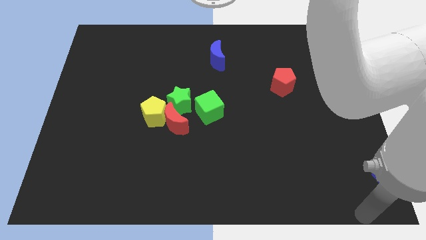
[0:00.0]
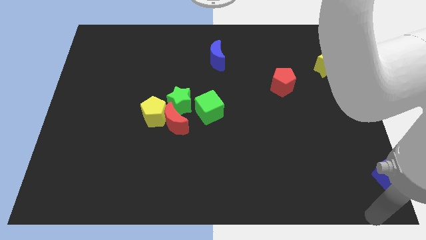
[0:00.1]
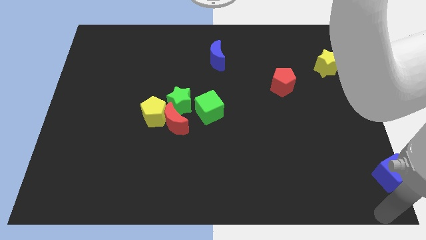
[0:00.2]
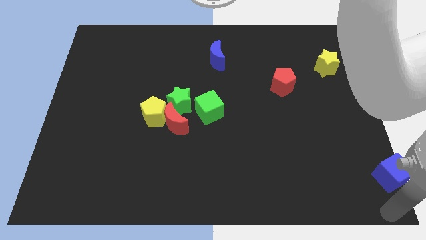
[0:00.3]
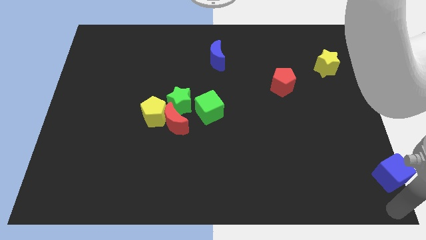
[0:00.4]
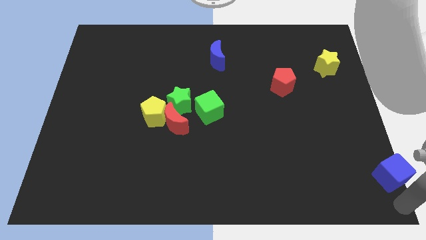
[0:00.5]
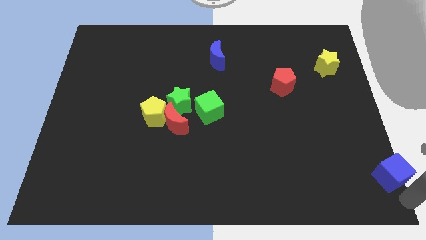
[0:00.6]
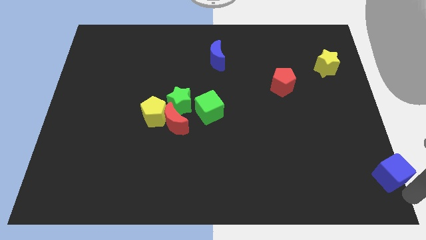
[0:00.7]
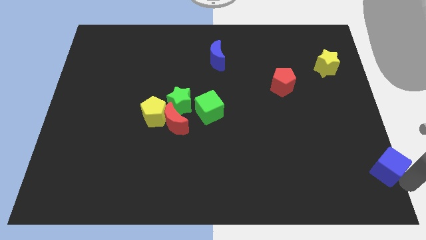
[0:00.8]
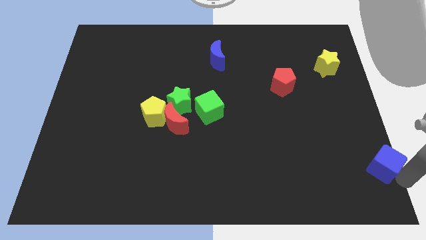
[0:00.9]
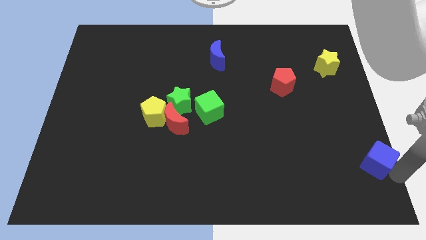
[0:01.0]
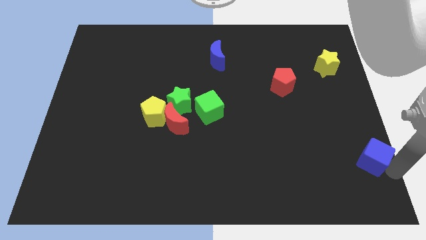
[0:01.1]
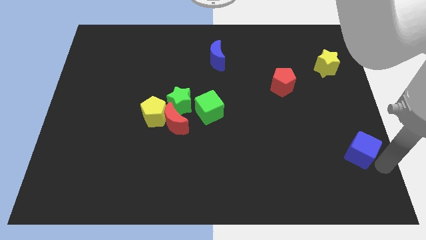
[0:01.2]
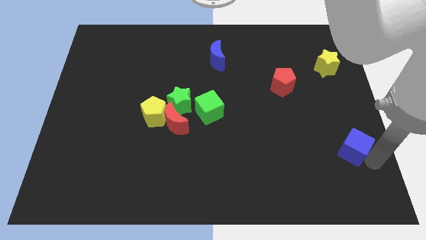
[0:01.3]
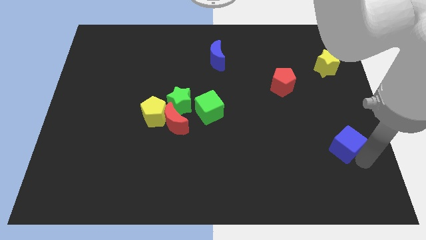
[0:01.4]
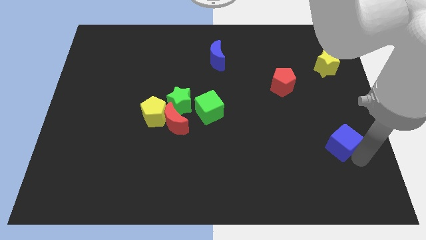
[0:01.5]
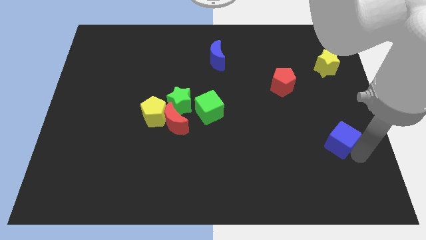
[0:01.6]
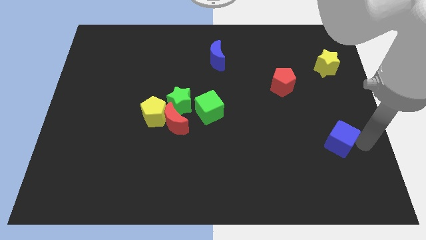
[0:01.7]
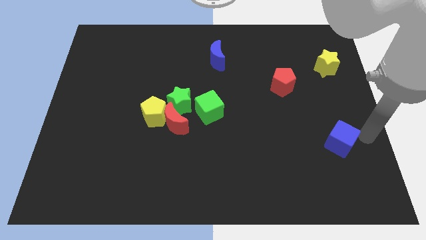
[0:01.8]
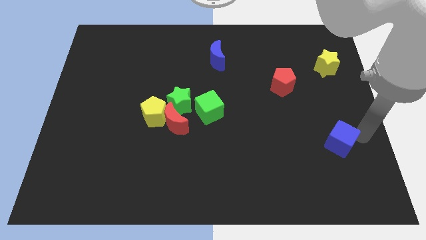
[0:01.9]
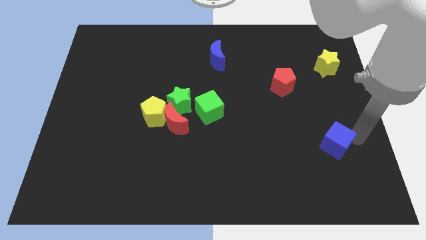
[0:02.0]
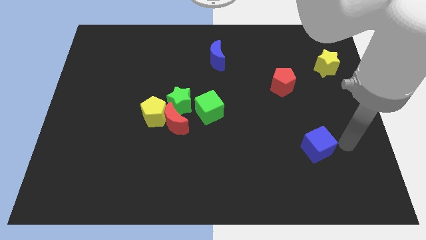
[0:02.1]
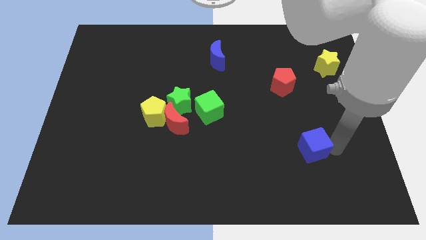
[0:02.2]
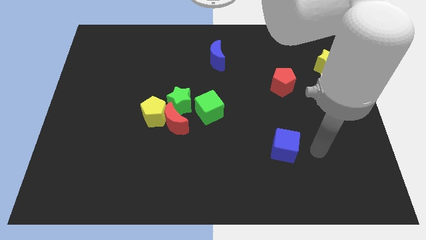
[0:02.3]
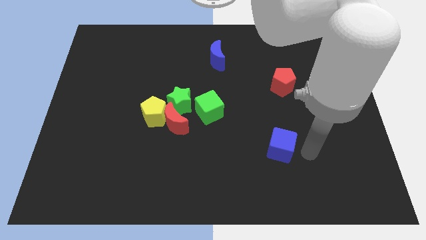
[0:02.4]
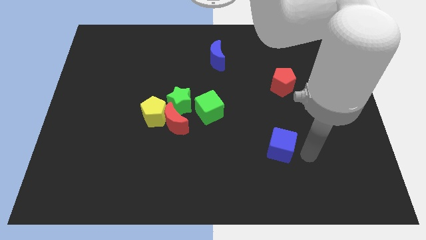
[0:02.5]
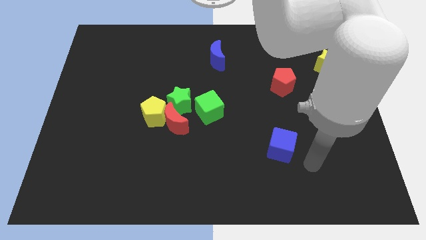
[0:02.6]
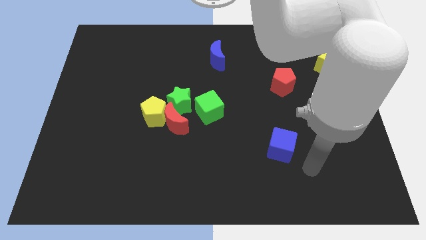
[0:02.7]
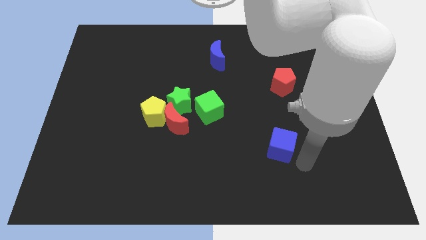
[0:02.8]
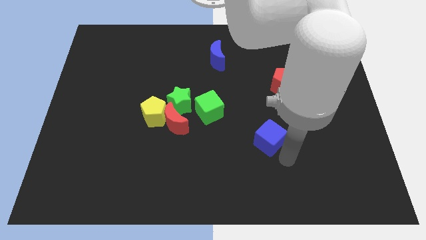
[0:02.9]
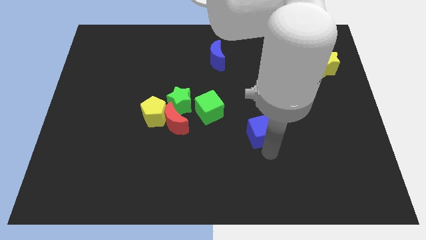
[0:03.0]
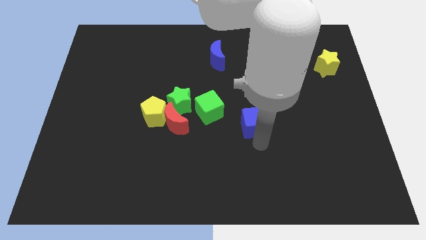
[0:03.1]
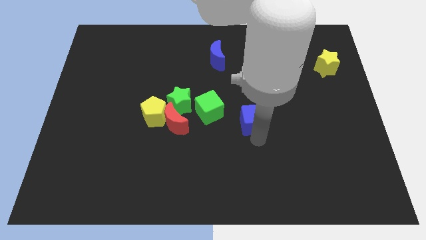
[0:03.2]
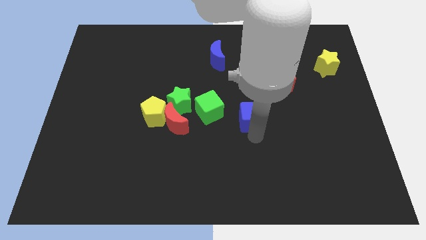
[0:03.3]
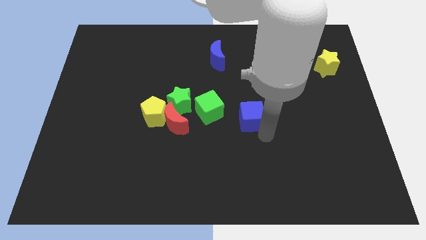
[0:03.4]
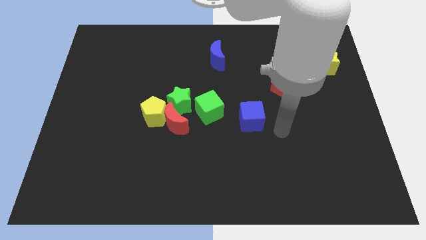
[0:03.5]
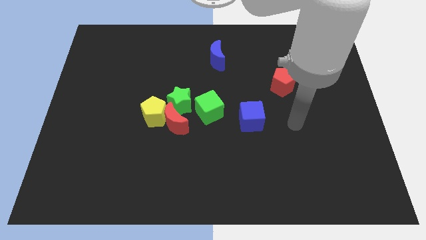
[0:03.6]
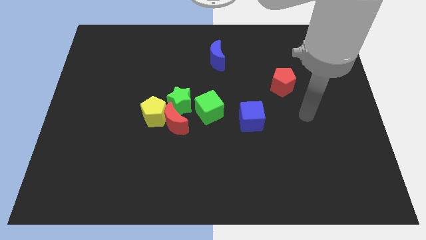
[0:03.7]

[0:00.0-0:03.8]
push the blue cube towards the right side of the green cube

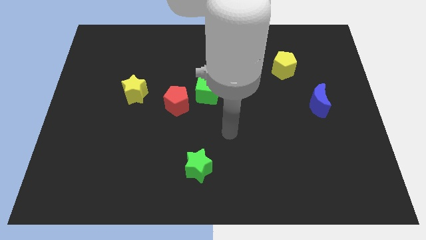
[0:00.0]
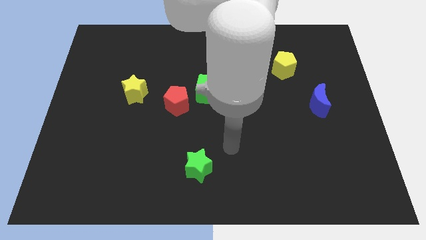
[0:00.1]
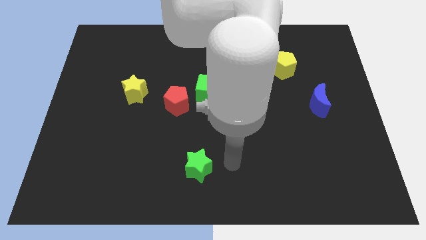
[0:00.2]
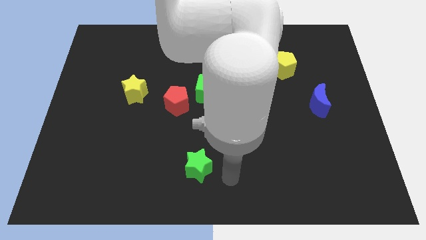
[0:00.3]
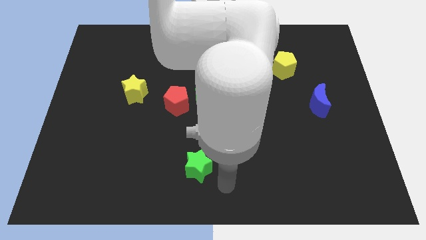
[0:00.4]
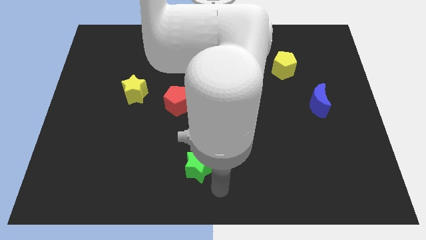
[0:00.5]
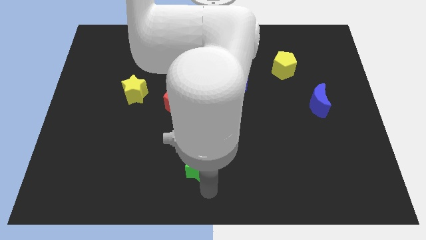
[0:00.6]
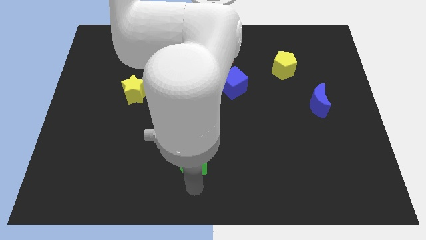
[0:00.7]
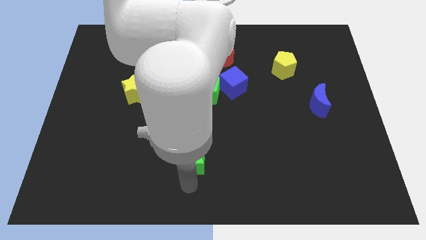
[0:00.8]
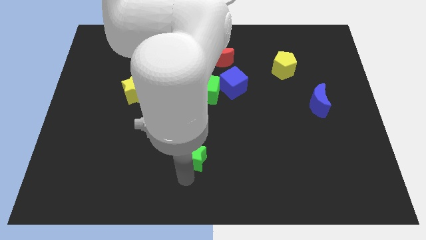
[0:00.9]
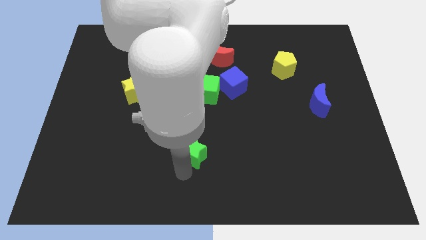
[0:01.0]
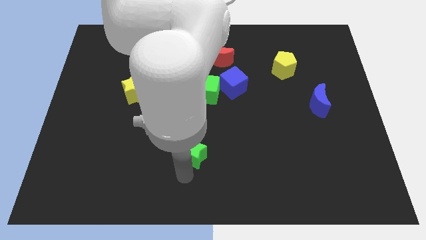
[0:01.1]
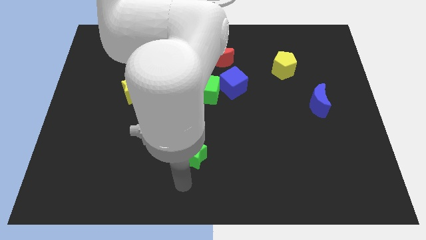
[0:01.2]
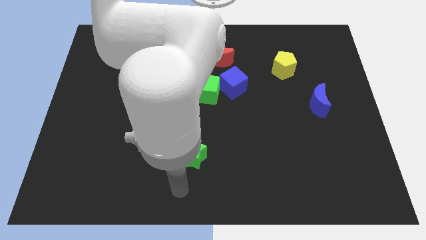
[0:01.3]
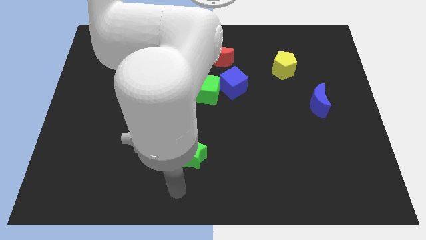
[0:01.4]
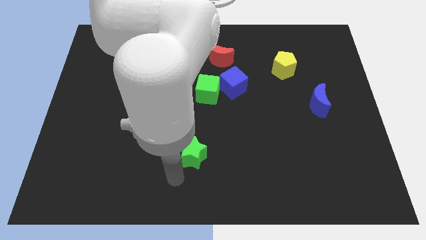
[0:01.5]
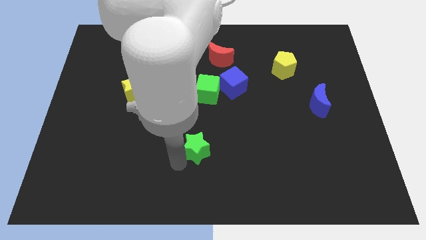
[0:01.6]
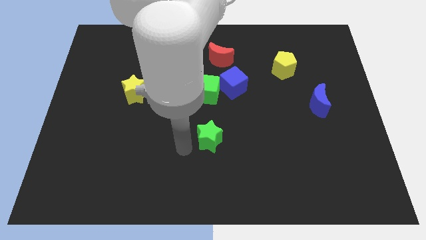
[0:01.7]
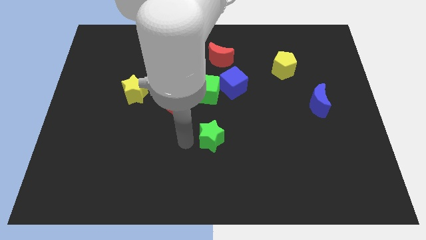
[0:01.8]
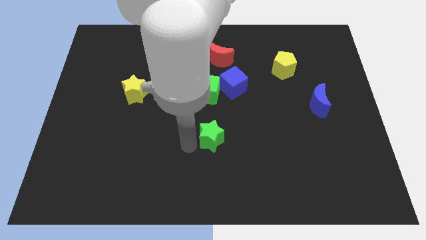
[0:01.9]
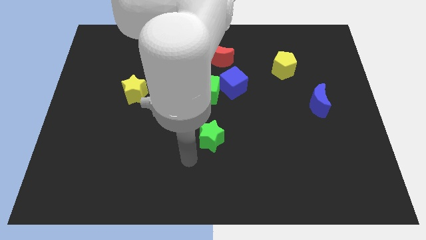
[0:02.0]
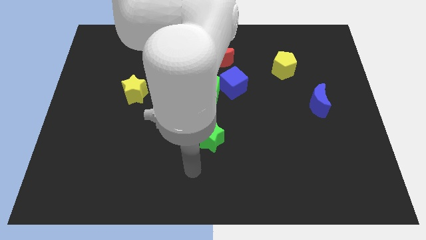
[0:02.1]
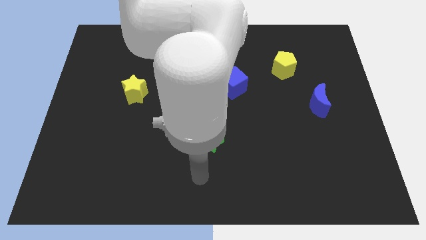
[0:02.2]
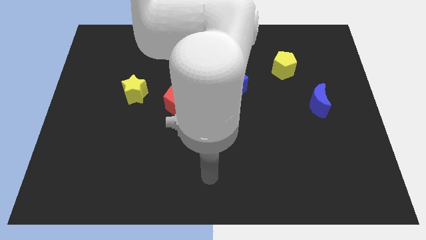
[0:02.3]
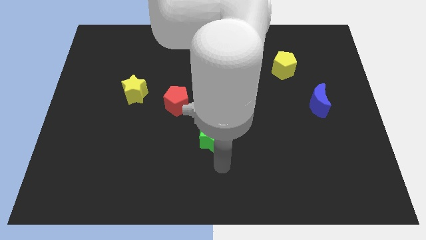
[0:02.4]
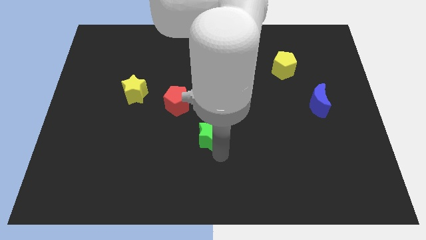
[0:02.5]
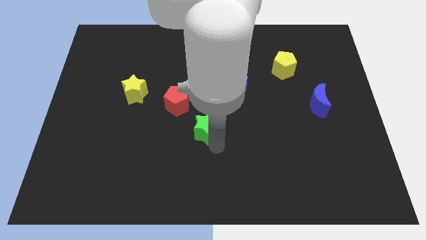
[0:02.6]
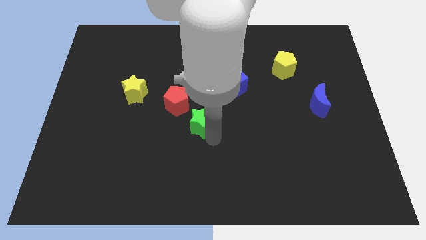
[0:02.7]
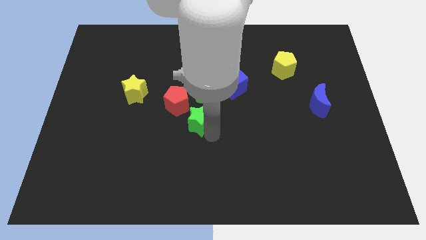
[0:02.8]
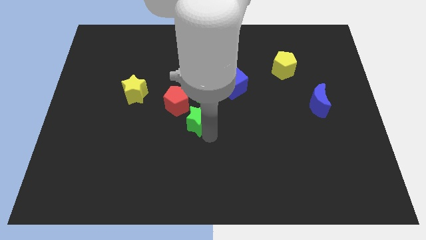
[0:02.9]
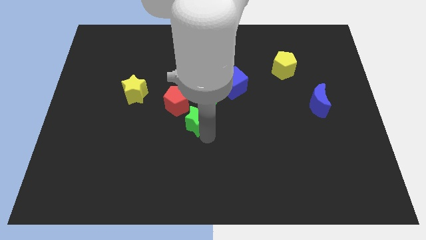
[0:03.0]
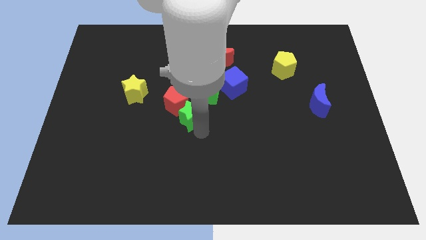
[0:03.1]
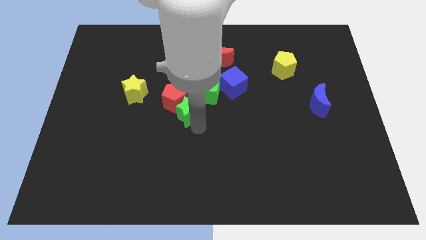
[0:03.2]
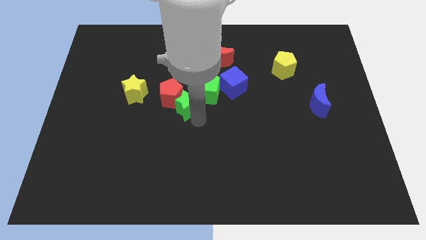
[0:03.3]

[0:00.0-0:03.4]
push the green star into the red pentagon

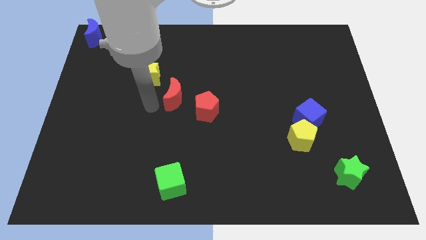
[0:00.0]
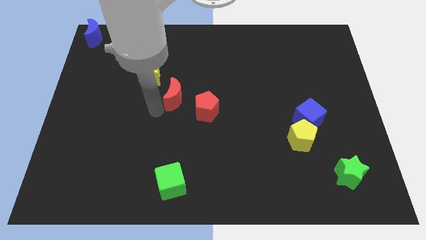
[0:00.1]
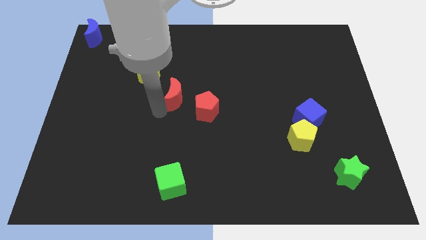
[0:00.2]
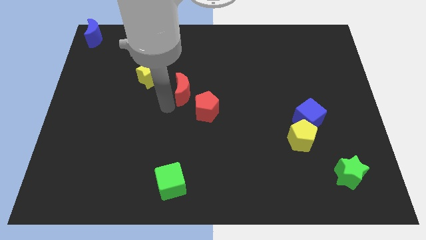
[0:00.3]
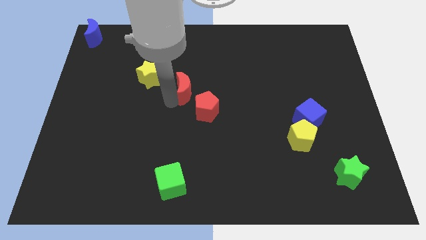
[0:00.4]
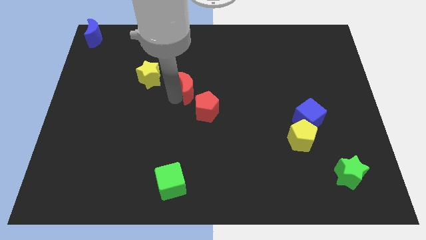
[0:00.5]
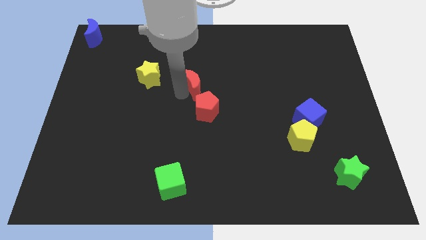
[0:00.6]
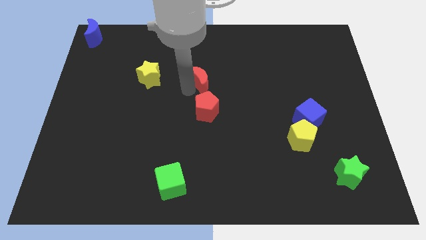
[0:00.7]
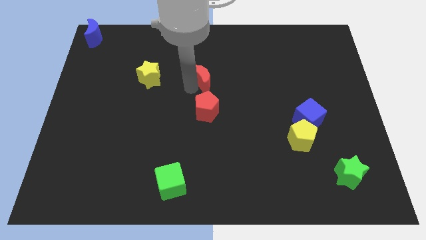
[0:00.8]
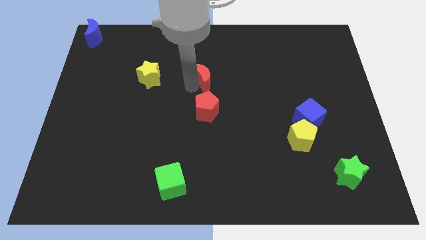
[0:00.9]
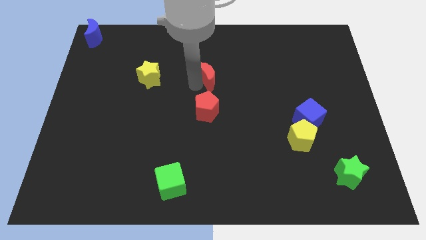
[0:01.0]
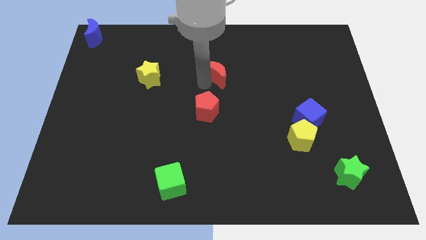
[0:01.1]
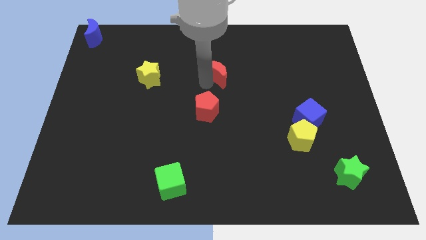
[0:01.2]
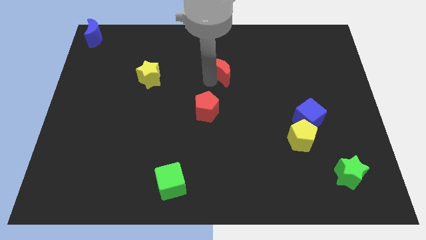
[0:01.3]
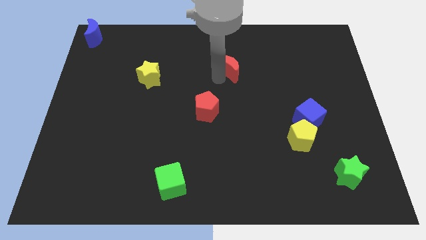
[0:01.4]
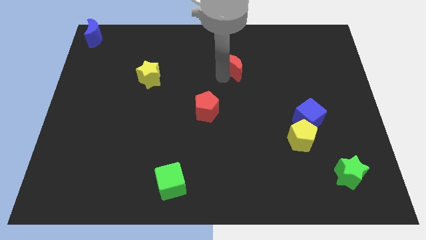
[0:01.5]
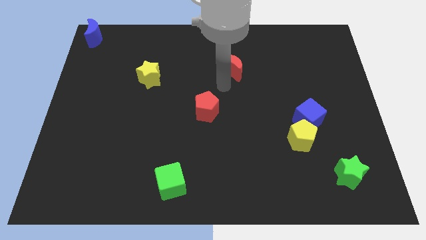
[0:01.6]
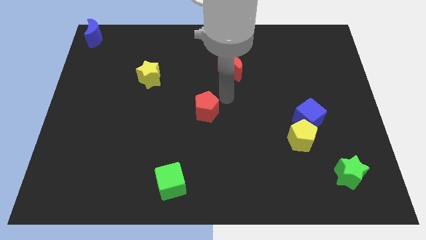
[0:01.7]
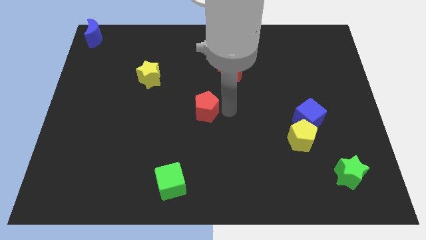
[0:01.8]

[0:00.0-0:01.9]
move the red crescent to the top right of the red pentagon
